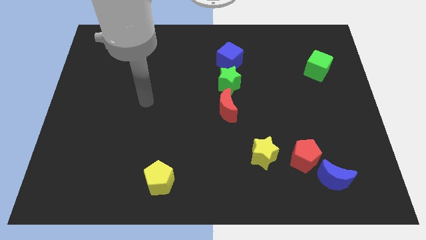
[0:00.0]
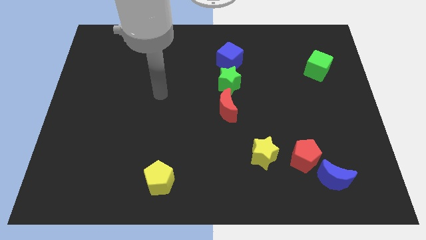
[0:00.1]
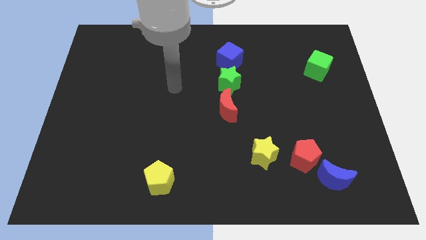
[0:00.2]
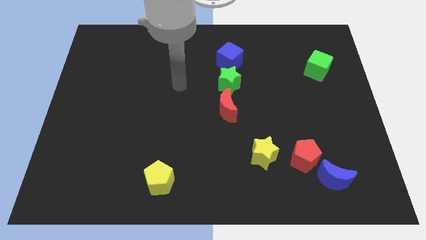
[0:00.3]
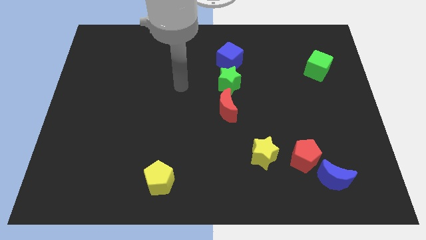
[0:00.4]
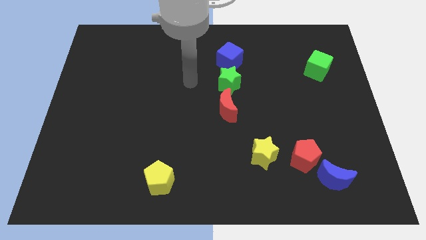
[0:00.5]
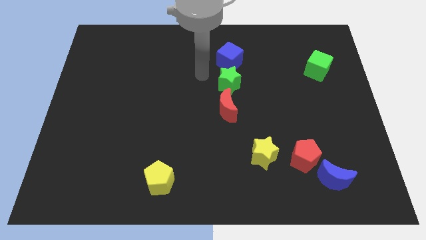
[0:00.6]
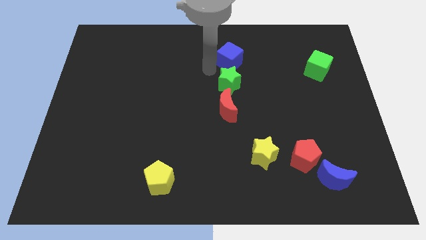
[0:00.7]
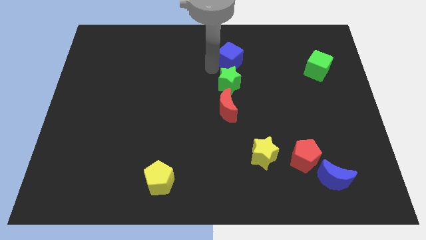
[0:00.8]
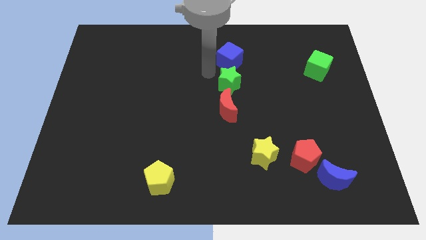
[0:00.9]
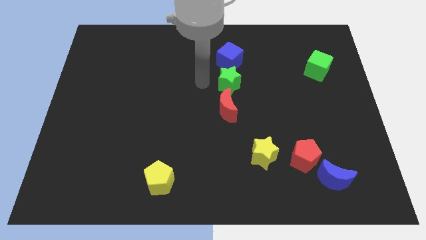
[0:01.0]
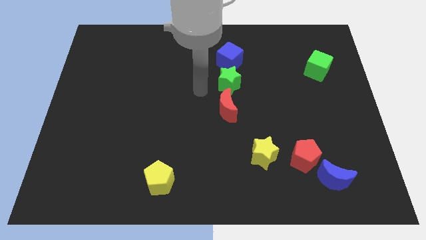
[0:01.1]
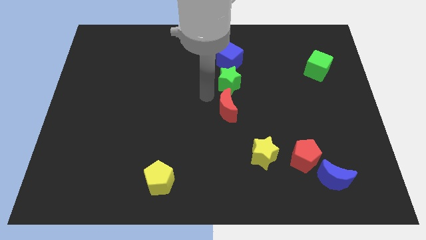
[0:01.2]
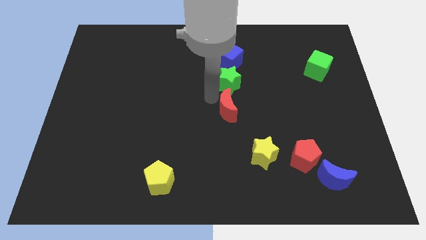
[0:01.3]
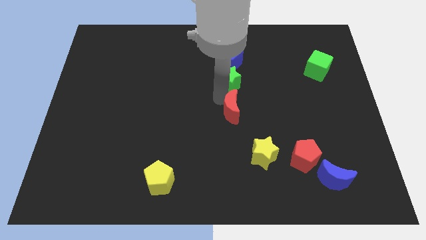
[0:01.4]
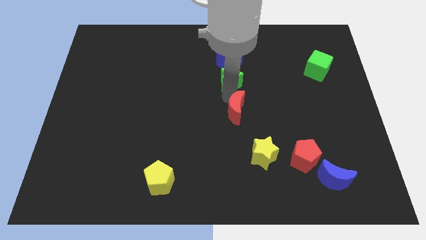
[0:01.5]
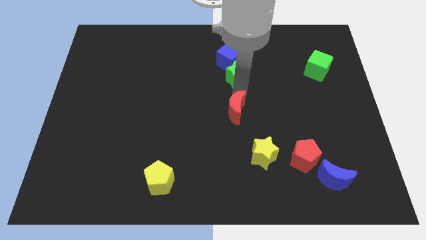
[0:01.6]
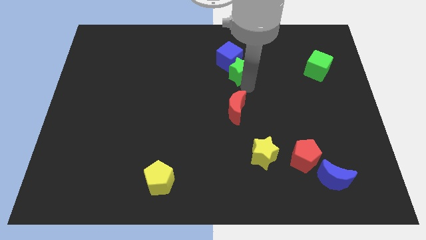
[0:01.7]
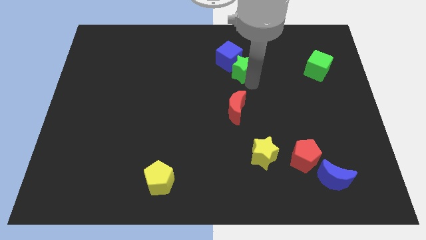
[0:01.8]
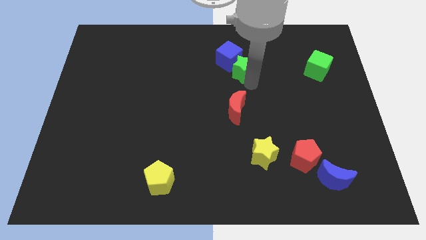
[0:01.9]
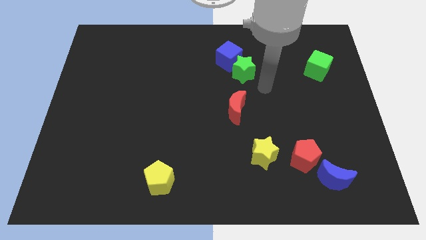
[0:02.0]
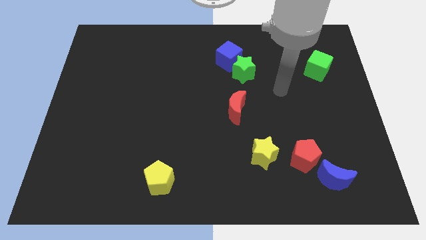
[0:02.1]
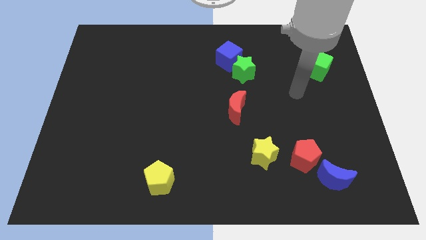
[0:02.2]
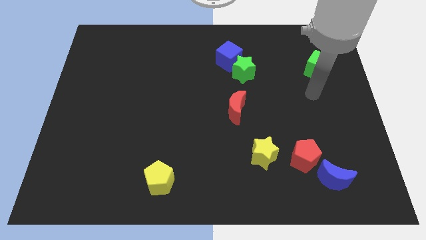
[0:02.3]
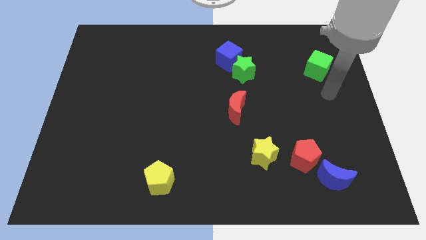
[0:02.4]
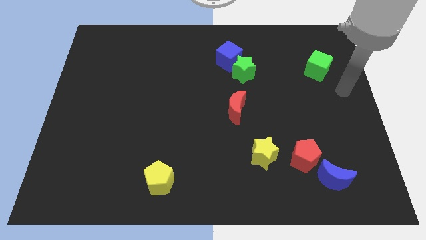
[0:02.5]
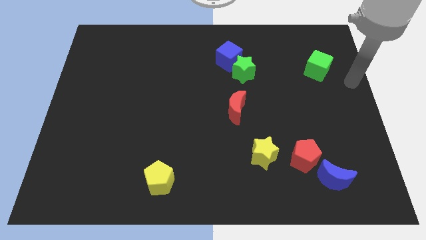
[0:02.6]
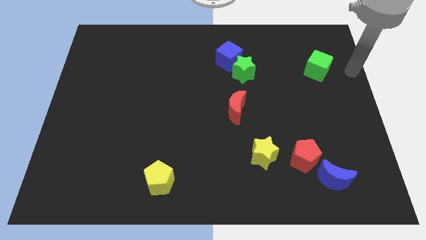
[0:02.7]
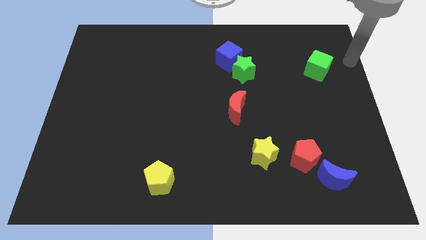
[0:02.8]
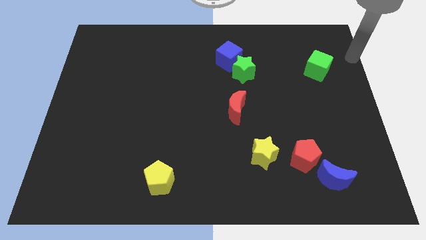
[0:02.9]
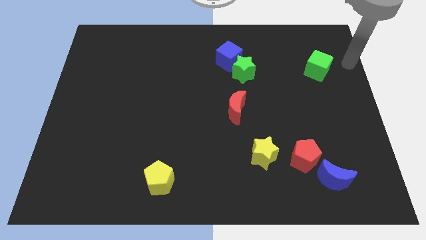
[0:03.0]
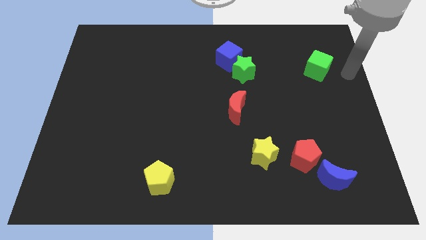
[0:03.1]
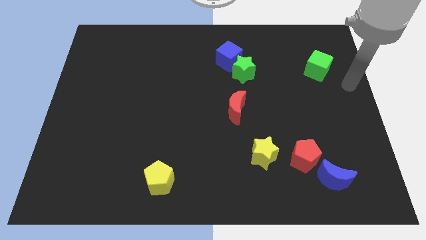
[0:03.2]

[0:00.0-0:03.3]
separate the green star with red crescent

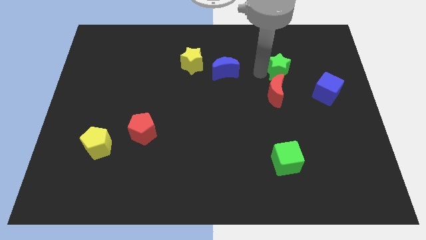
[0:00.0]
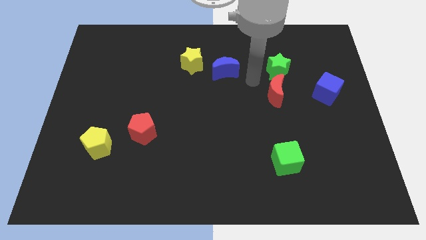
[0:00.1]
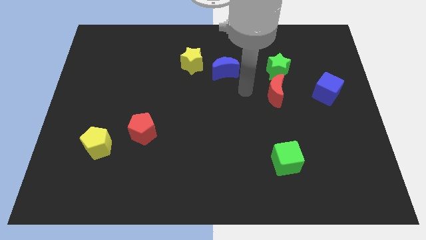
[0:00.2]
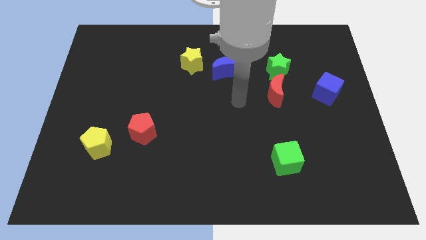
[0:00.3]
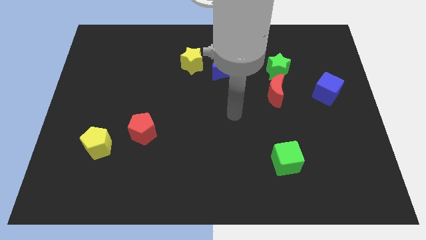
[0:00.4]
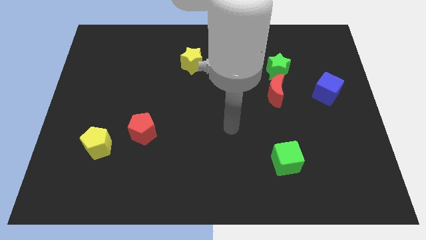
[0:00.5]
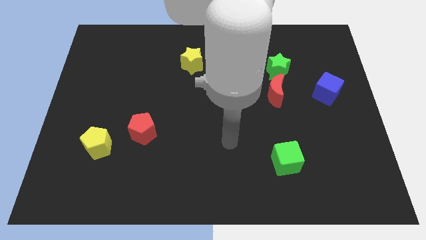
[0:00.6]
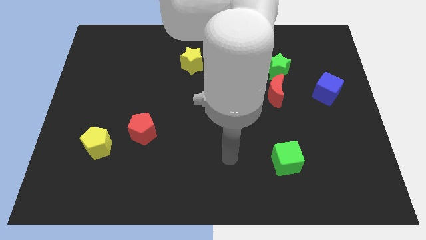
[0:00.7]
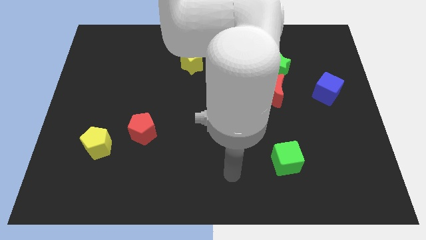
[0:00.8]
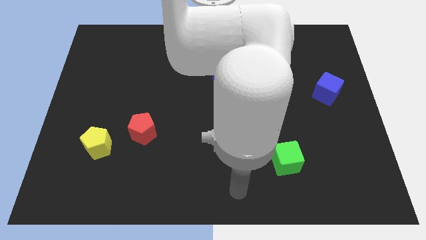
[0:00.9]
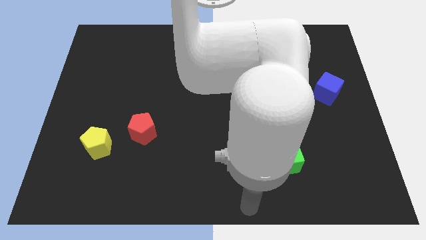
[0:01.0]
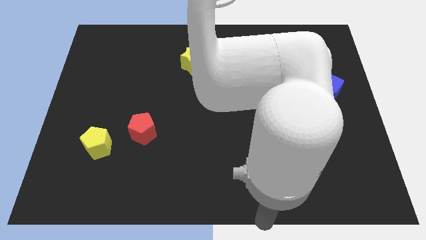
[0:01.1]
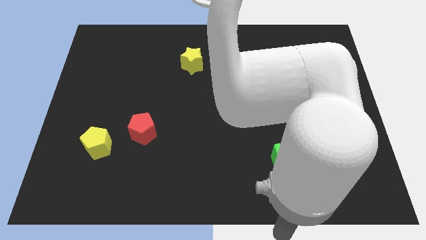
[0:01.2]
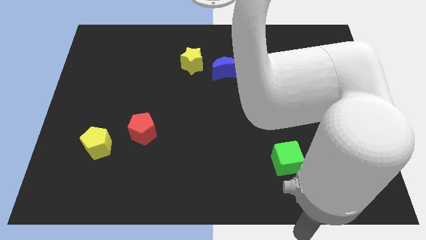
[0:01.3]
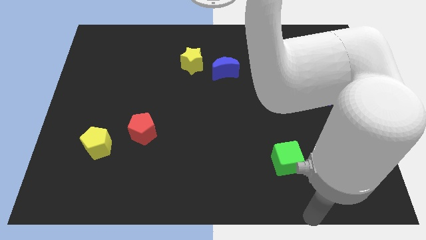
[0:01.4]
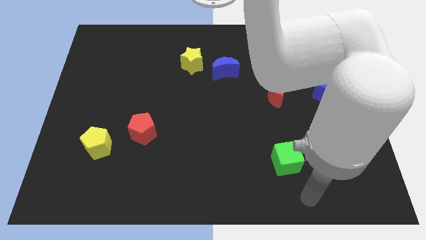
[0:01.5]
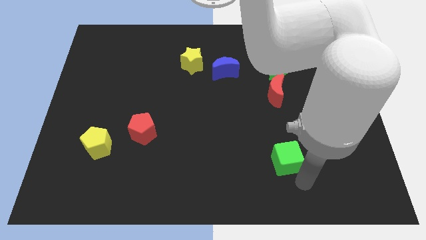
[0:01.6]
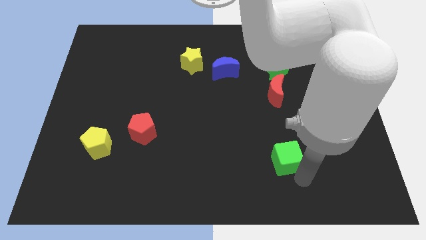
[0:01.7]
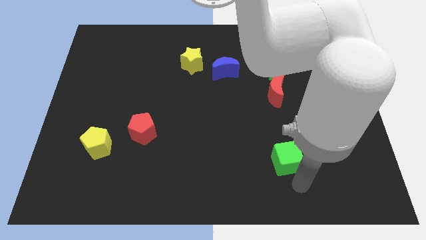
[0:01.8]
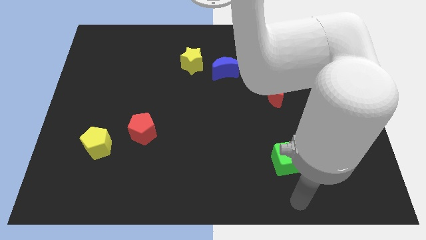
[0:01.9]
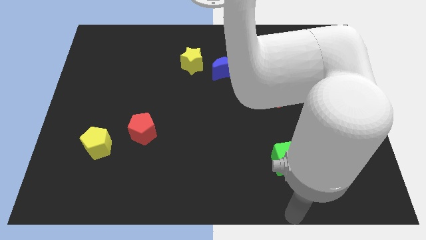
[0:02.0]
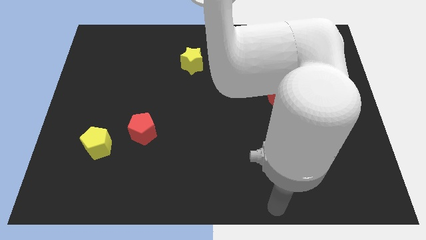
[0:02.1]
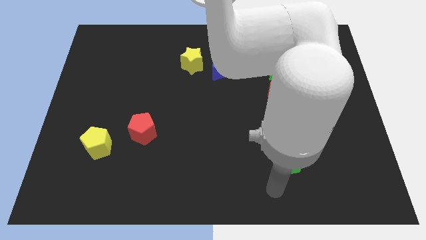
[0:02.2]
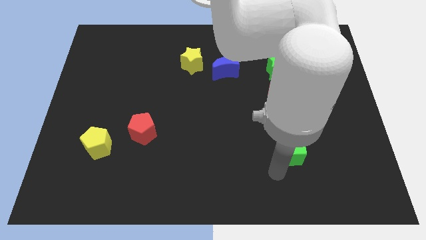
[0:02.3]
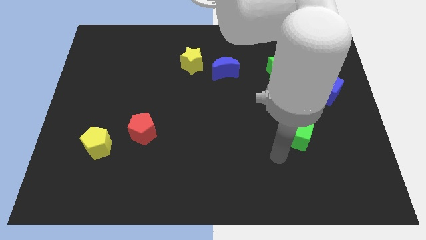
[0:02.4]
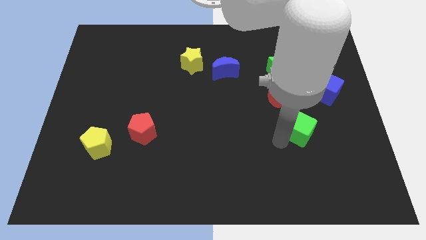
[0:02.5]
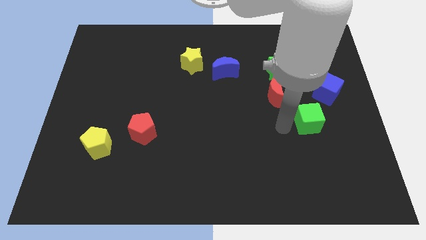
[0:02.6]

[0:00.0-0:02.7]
move the green cube towards blue cube

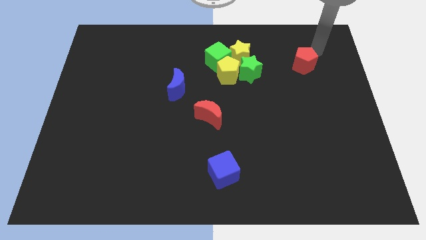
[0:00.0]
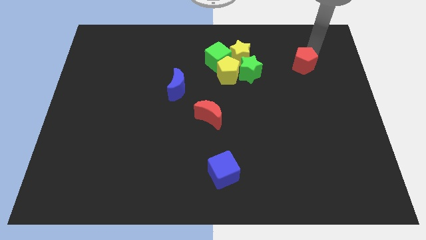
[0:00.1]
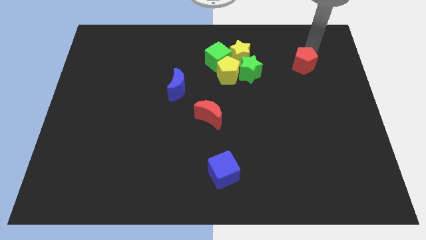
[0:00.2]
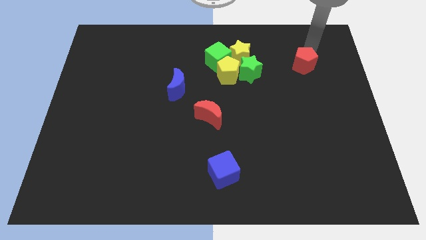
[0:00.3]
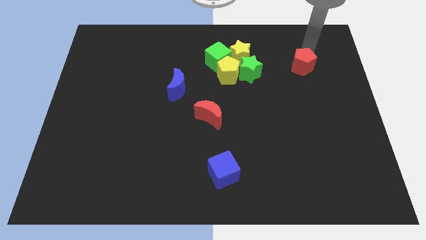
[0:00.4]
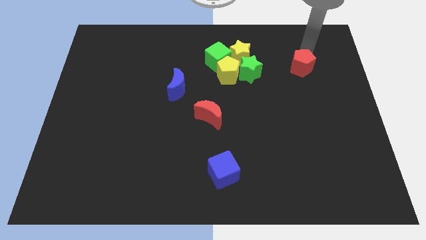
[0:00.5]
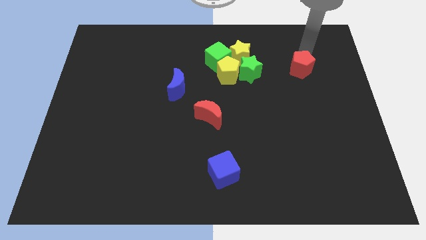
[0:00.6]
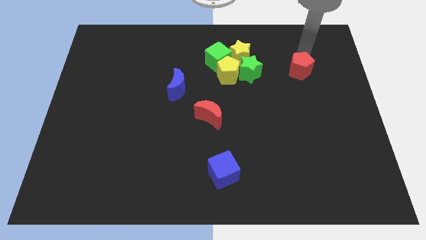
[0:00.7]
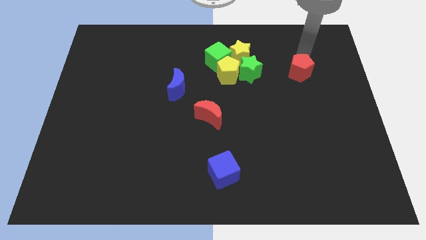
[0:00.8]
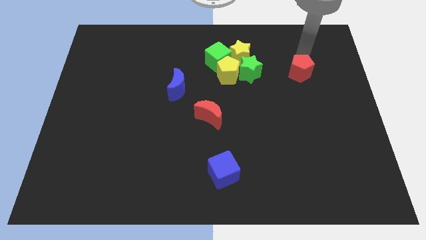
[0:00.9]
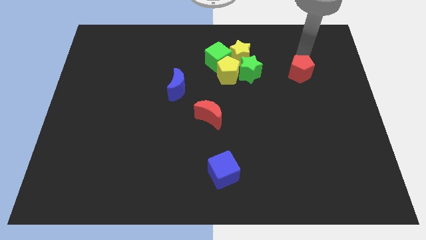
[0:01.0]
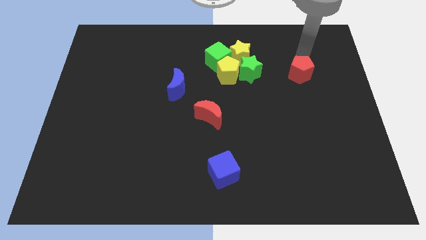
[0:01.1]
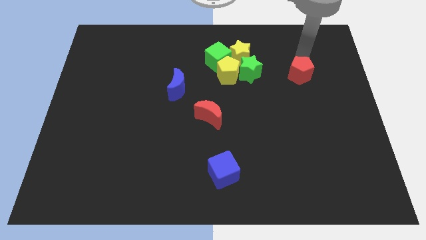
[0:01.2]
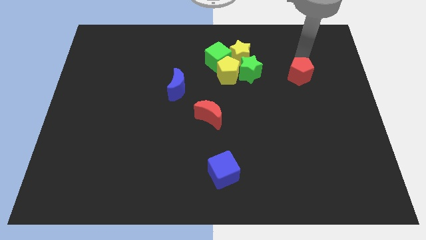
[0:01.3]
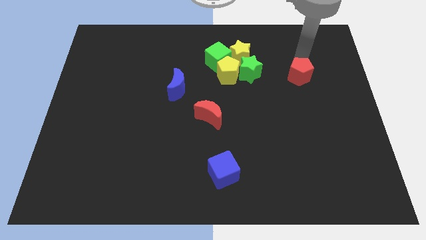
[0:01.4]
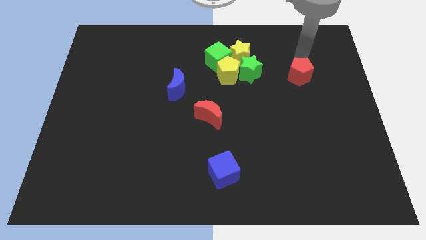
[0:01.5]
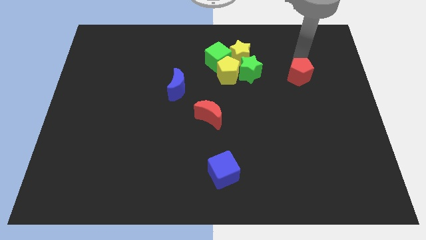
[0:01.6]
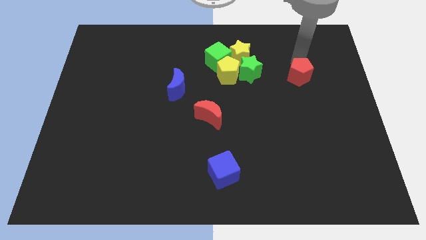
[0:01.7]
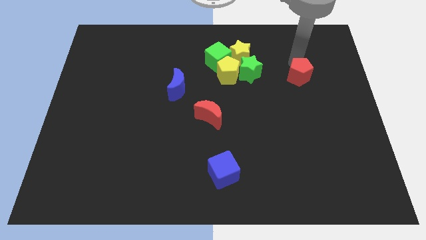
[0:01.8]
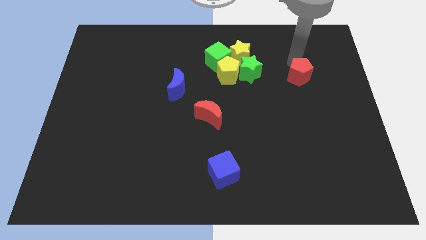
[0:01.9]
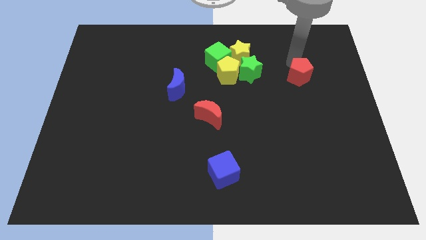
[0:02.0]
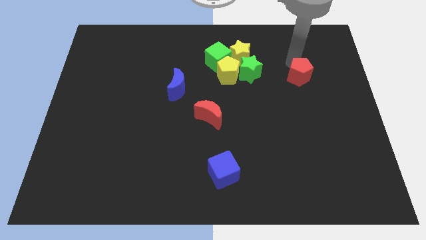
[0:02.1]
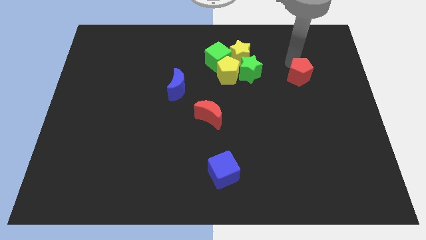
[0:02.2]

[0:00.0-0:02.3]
slightly move the red pentagon to the right of the green star

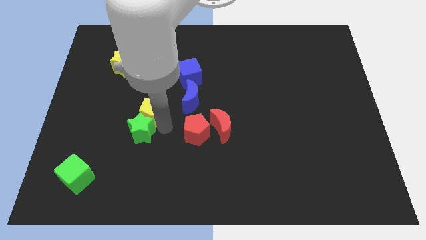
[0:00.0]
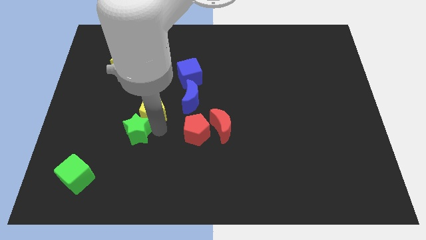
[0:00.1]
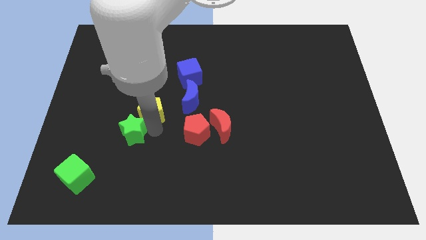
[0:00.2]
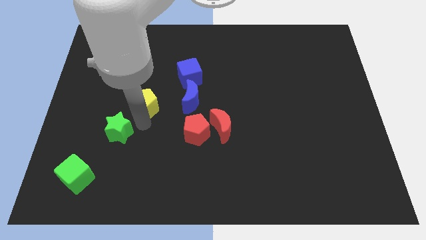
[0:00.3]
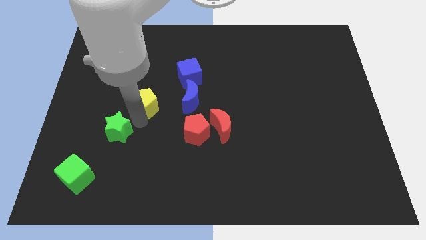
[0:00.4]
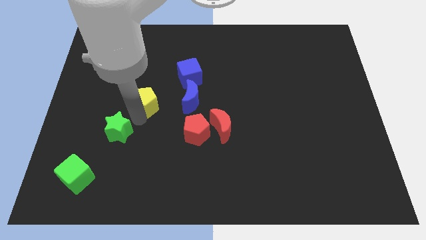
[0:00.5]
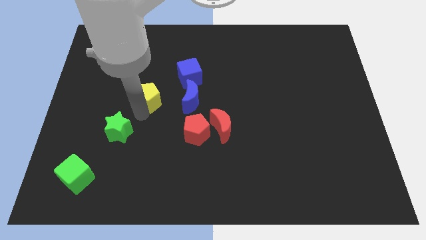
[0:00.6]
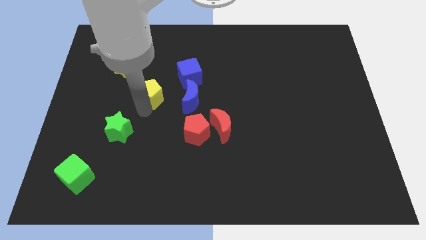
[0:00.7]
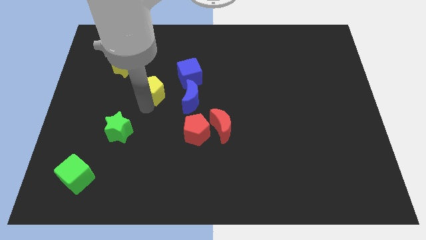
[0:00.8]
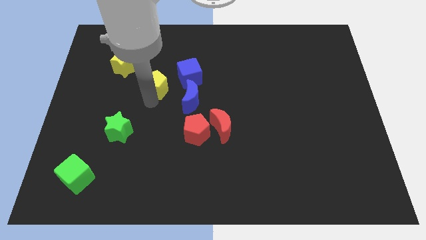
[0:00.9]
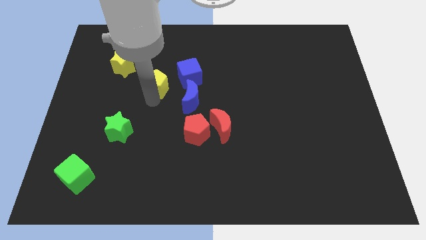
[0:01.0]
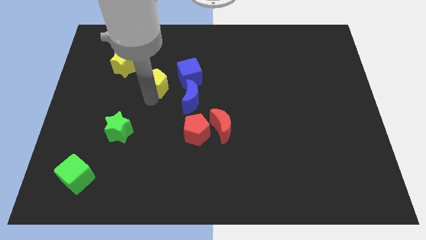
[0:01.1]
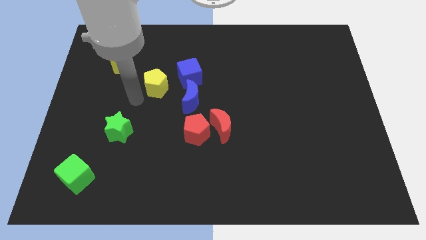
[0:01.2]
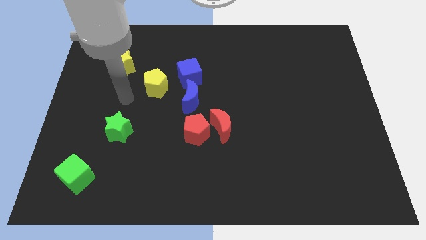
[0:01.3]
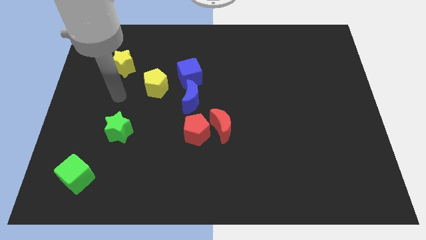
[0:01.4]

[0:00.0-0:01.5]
separate green star and yellow pentagon
